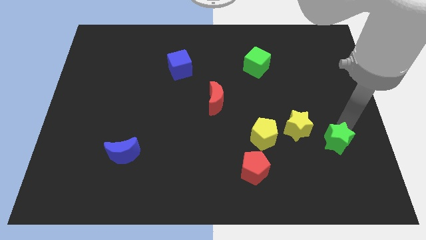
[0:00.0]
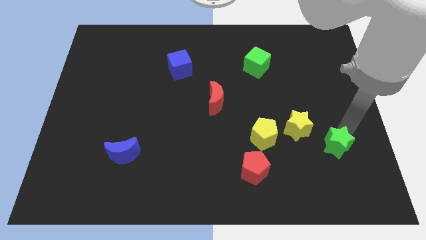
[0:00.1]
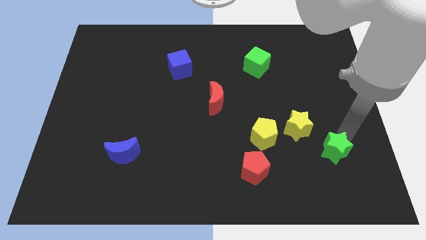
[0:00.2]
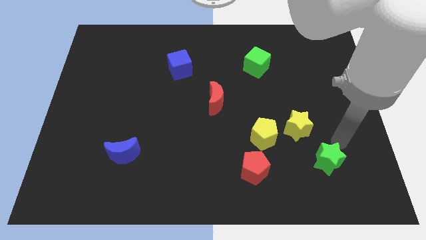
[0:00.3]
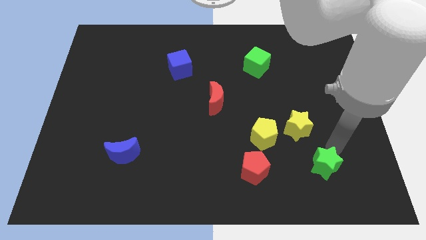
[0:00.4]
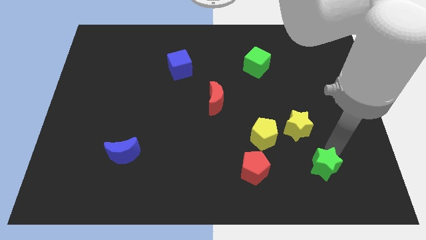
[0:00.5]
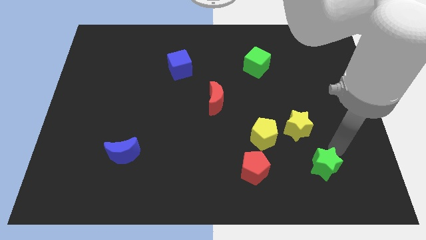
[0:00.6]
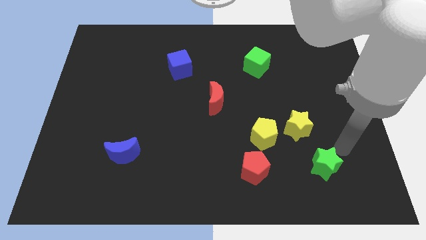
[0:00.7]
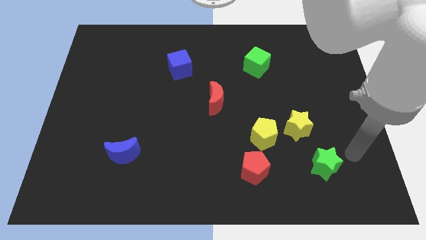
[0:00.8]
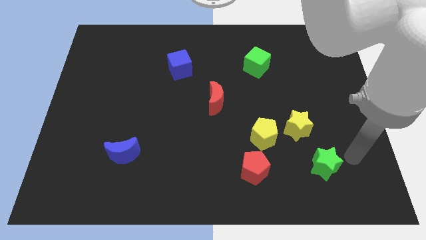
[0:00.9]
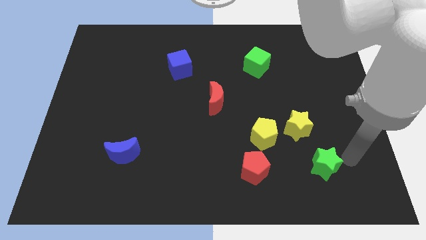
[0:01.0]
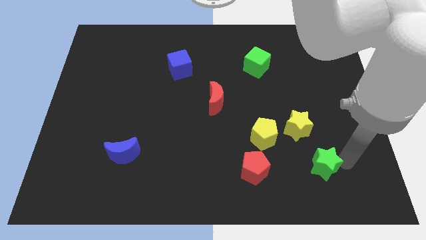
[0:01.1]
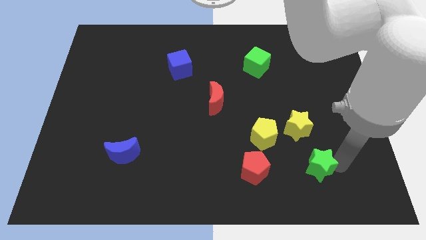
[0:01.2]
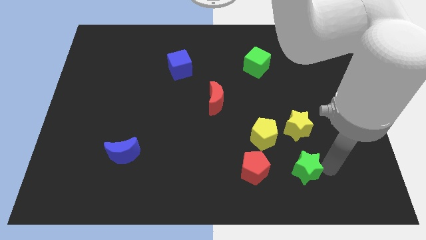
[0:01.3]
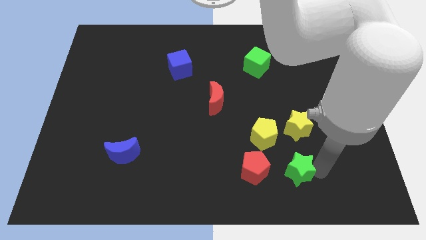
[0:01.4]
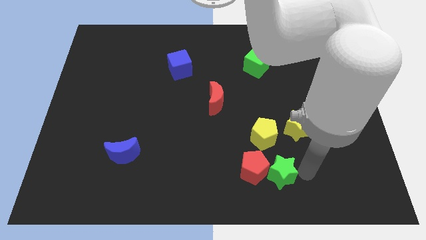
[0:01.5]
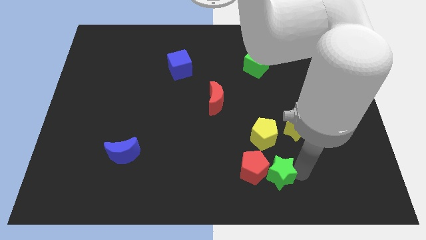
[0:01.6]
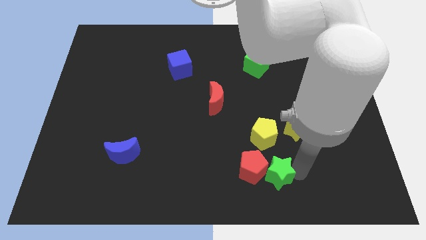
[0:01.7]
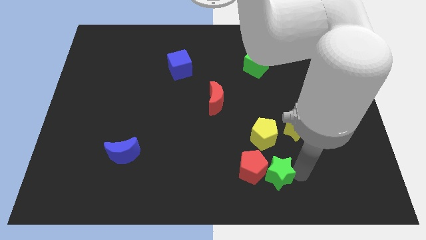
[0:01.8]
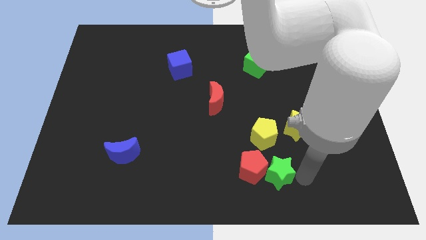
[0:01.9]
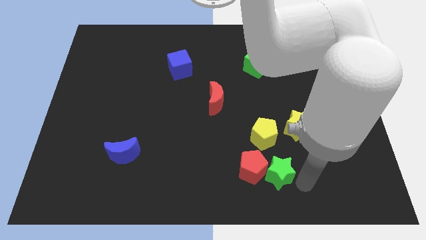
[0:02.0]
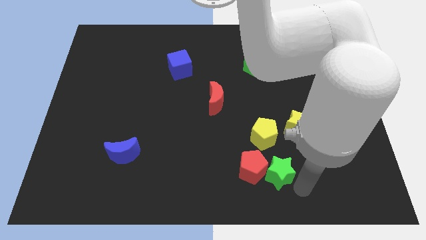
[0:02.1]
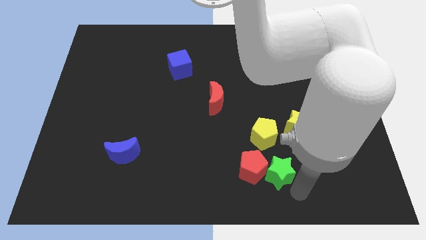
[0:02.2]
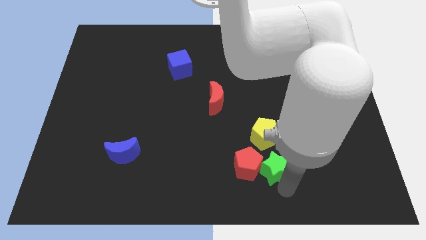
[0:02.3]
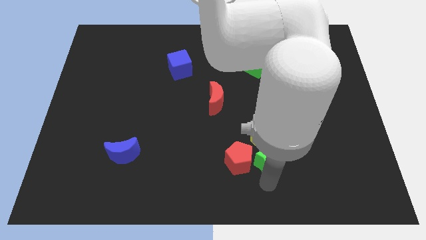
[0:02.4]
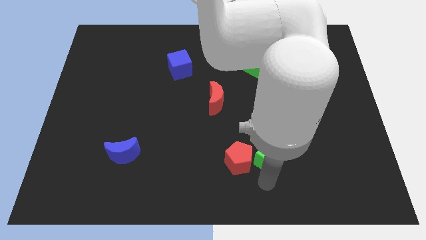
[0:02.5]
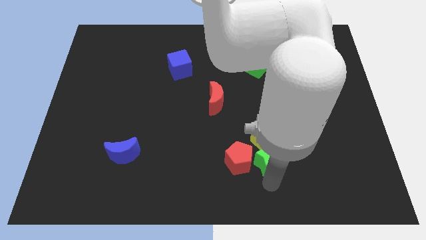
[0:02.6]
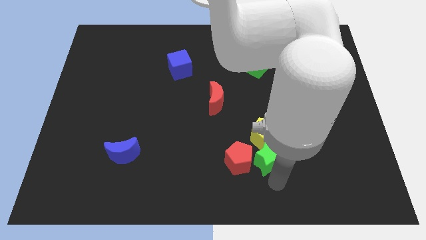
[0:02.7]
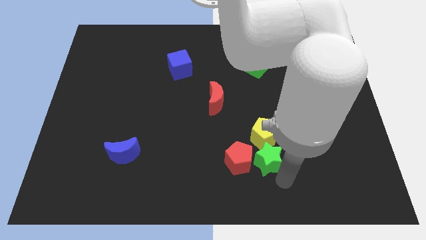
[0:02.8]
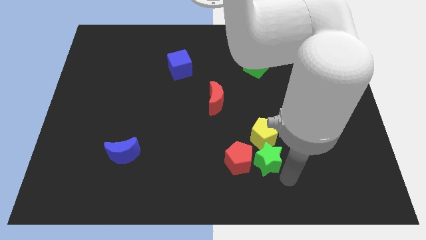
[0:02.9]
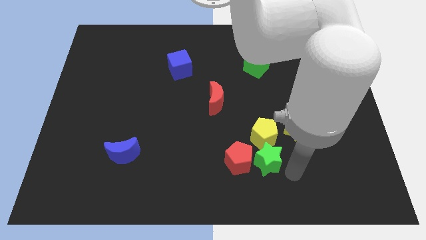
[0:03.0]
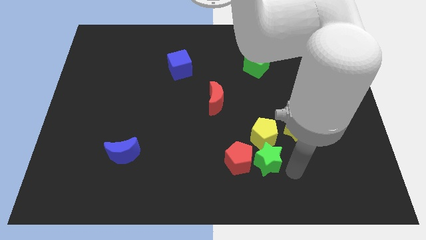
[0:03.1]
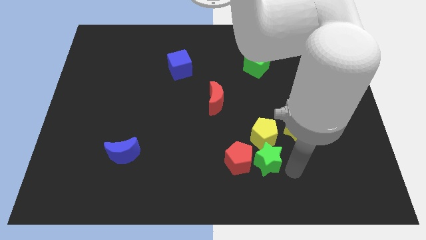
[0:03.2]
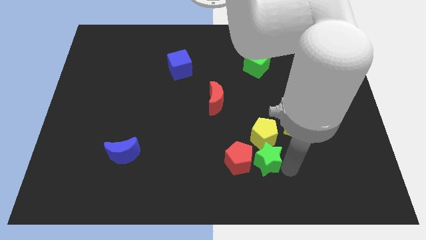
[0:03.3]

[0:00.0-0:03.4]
push the green star into red pentagon

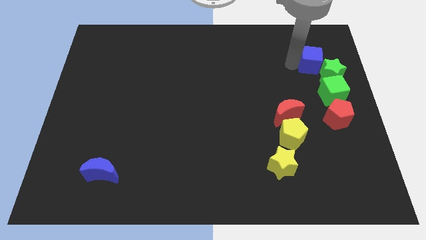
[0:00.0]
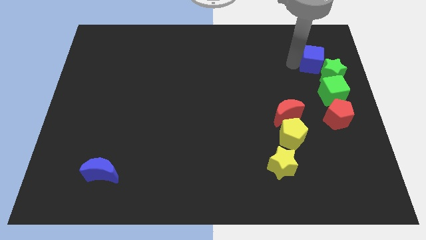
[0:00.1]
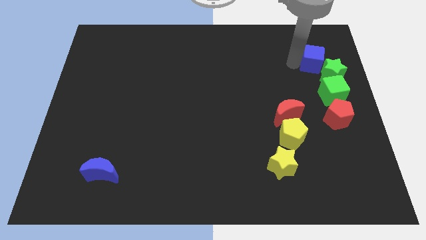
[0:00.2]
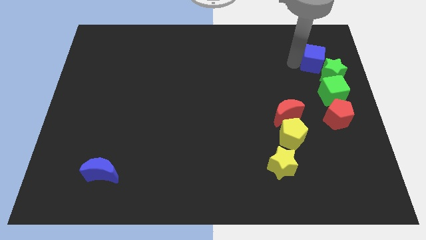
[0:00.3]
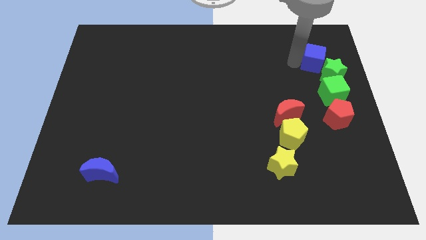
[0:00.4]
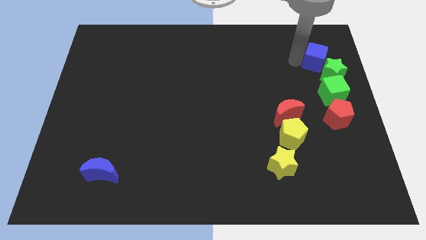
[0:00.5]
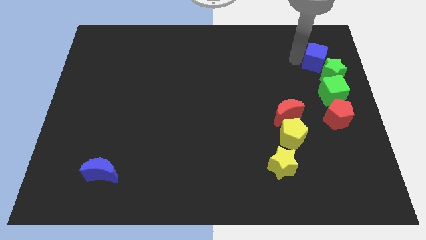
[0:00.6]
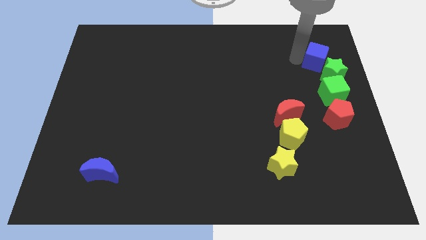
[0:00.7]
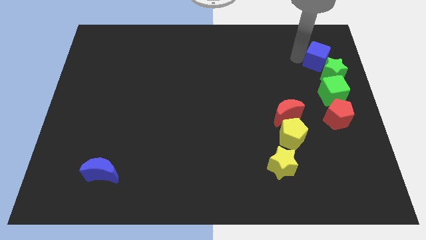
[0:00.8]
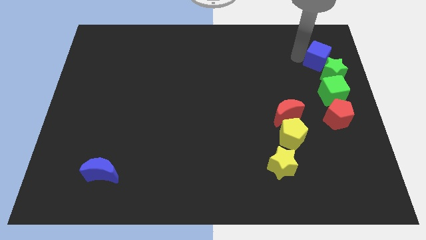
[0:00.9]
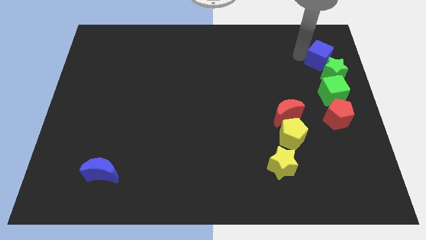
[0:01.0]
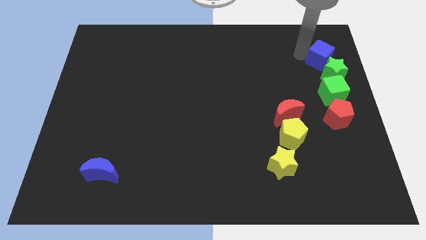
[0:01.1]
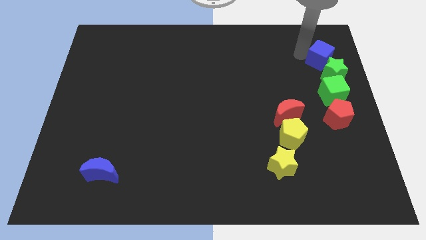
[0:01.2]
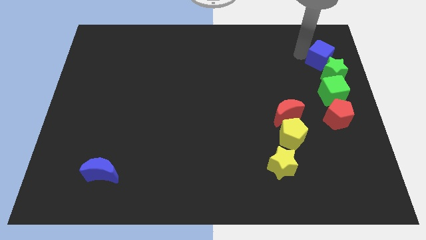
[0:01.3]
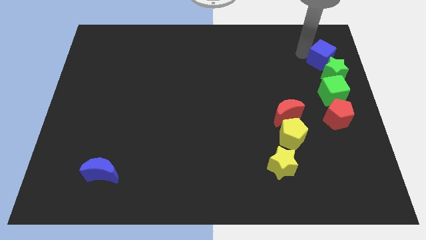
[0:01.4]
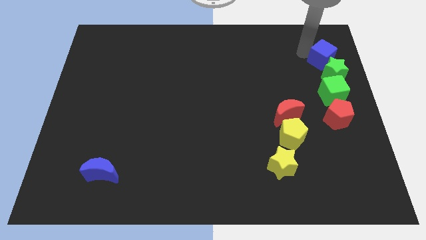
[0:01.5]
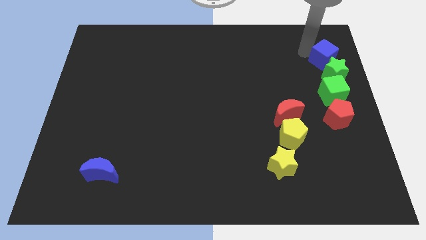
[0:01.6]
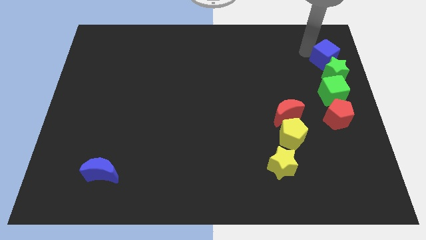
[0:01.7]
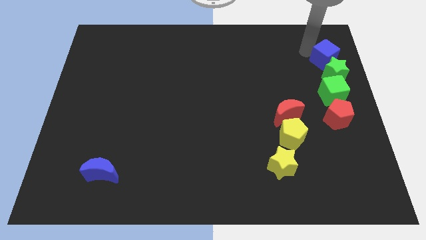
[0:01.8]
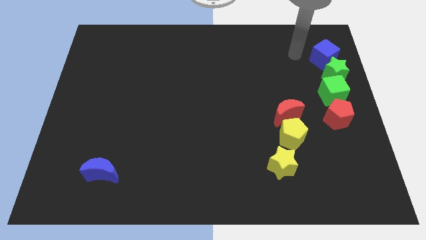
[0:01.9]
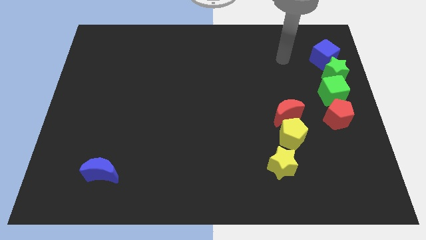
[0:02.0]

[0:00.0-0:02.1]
move the blue cube to the top of the green star

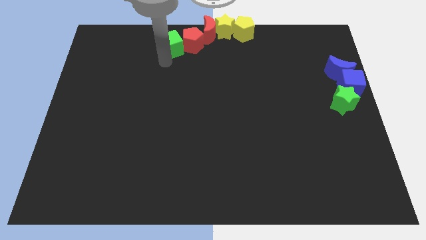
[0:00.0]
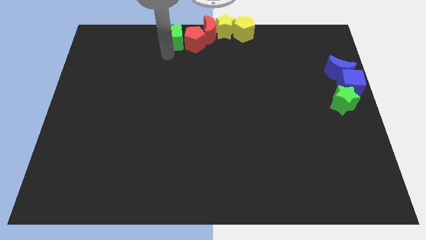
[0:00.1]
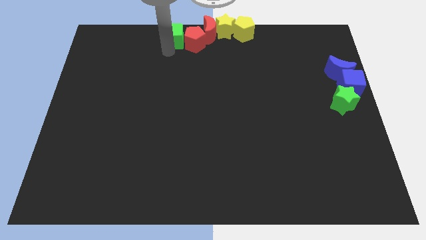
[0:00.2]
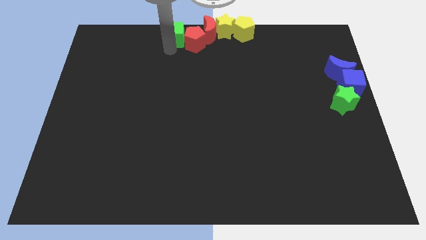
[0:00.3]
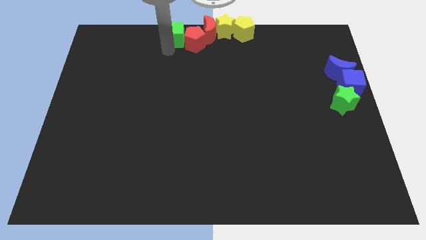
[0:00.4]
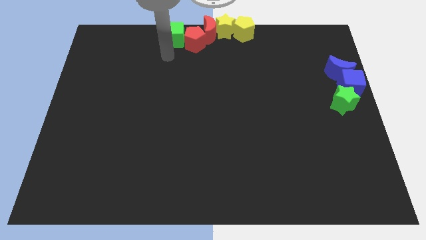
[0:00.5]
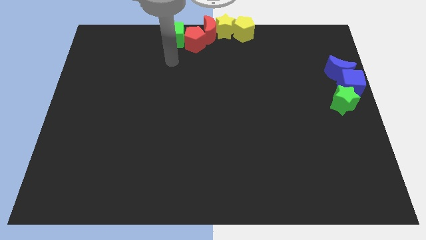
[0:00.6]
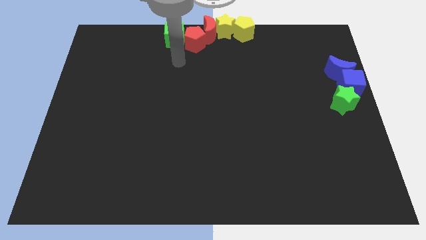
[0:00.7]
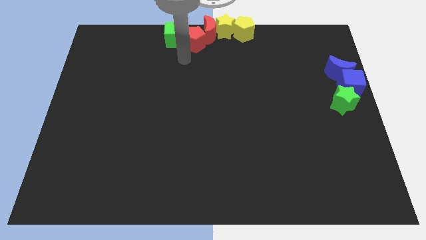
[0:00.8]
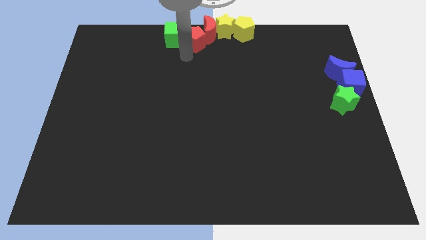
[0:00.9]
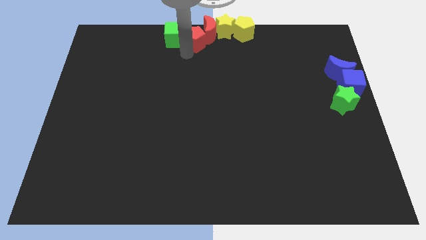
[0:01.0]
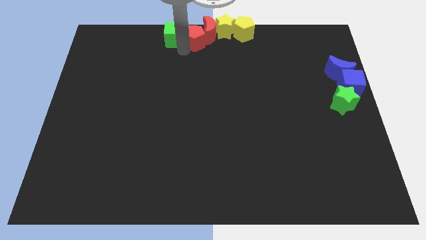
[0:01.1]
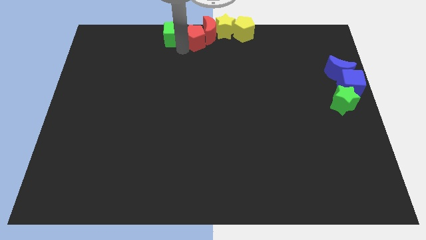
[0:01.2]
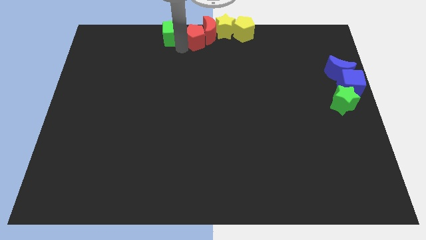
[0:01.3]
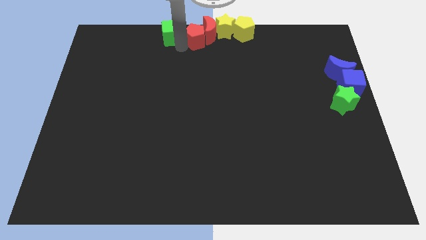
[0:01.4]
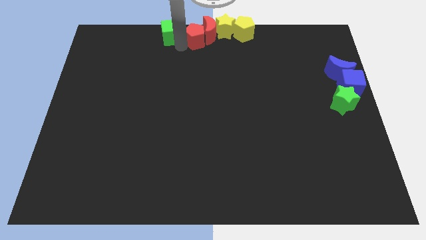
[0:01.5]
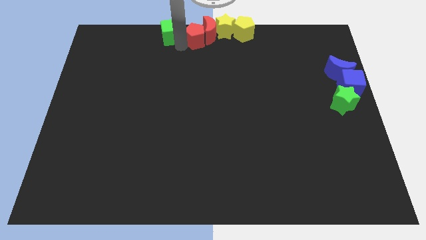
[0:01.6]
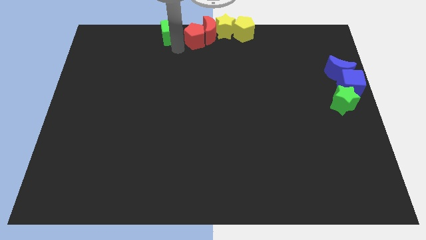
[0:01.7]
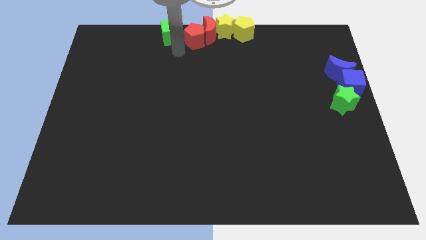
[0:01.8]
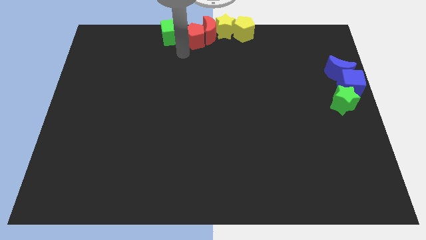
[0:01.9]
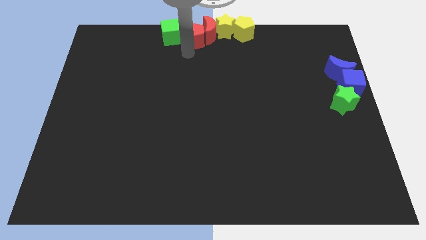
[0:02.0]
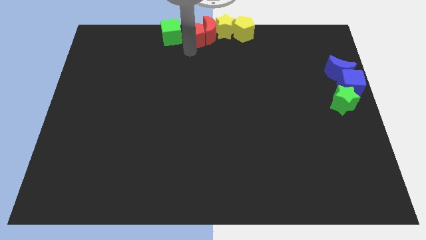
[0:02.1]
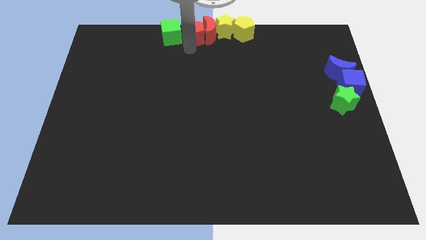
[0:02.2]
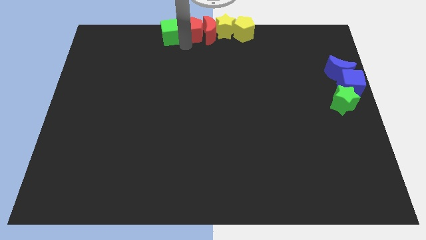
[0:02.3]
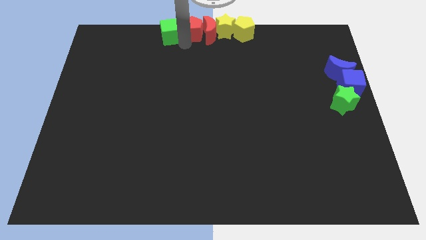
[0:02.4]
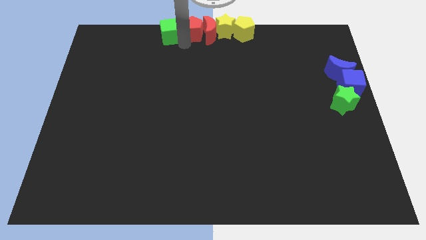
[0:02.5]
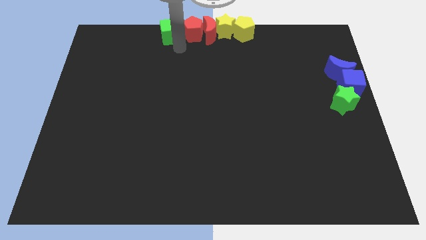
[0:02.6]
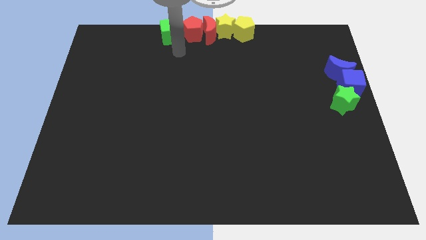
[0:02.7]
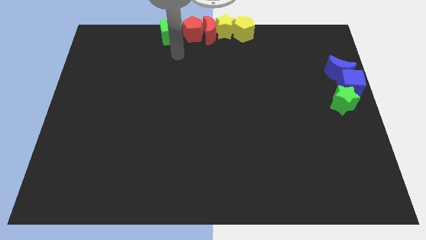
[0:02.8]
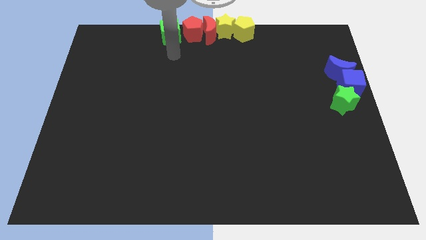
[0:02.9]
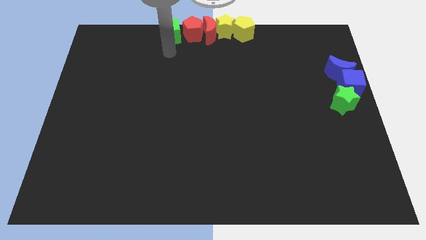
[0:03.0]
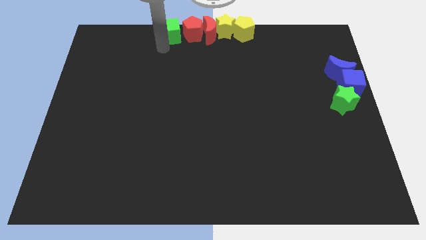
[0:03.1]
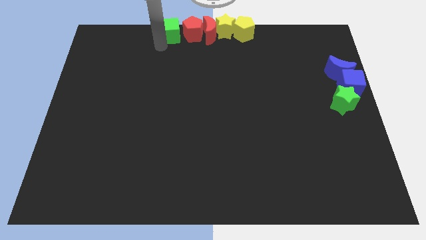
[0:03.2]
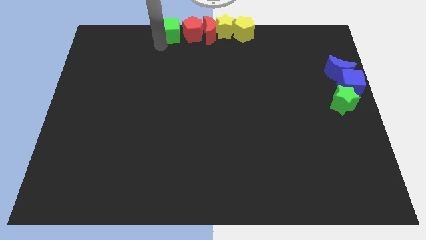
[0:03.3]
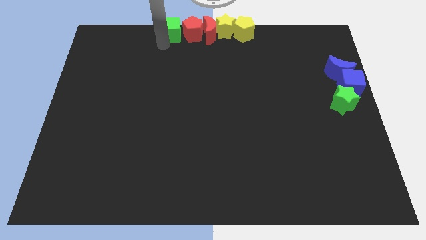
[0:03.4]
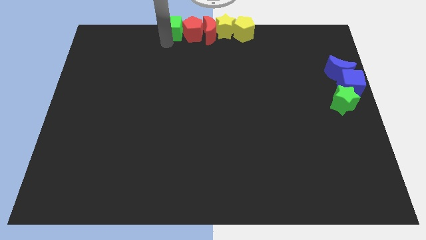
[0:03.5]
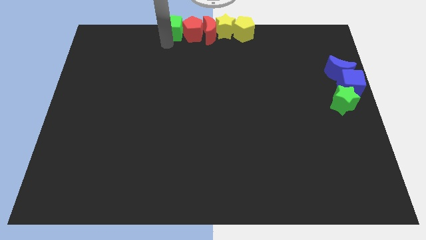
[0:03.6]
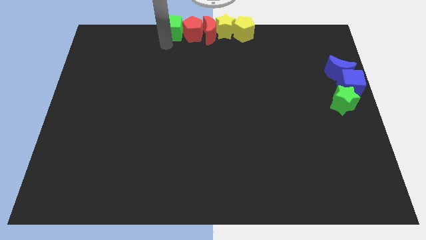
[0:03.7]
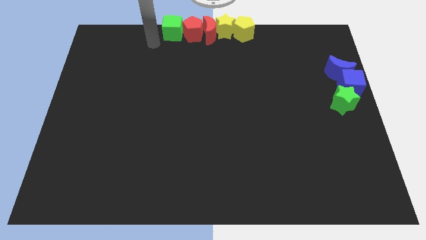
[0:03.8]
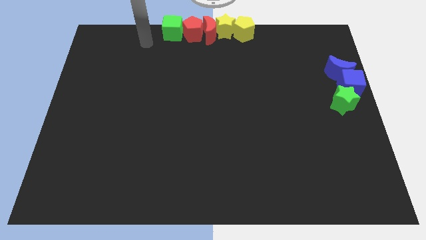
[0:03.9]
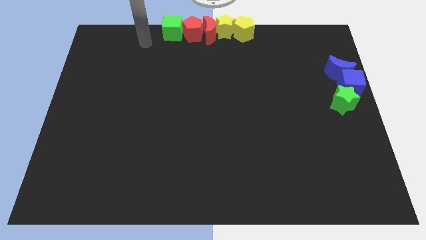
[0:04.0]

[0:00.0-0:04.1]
put the red pentagon and green cube to the left side of the red crescent
